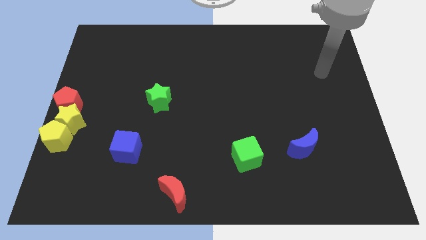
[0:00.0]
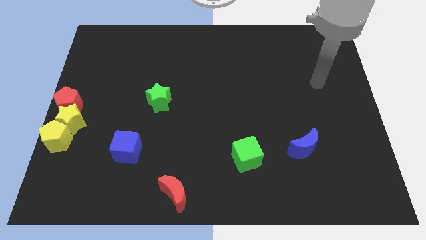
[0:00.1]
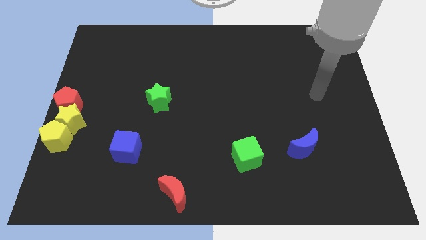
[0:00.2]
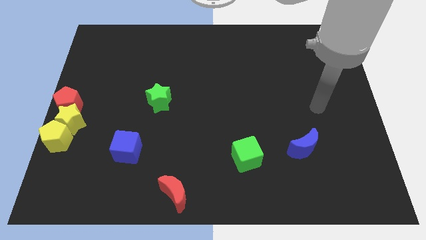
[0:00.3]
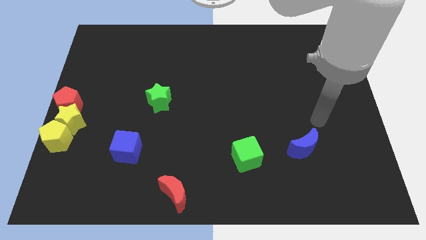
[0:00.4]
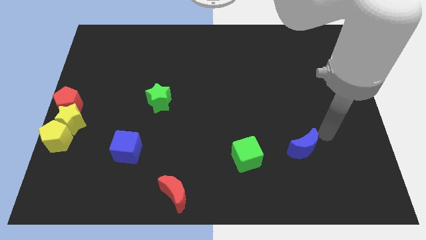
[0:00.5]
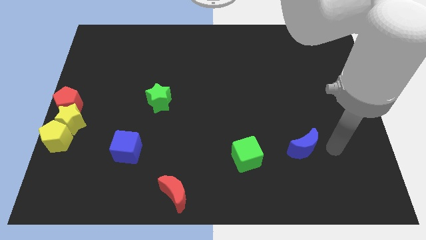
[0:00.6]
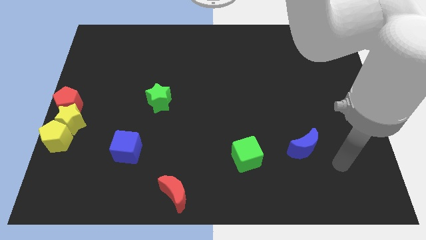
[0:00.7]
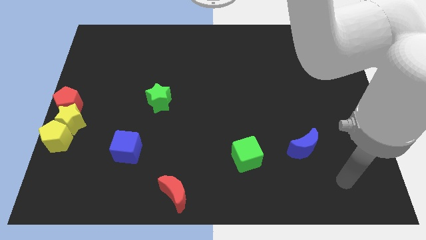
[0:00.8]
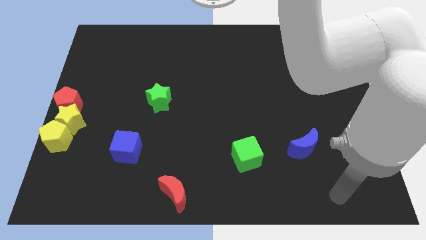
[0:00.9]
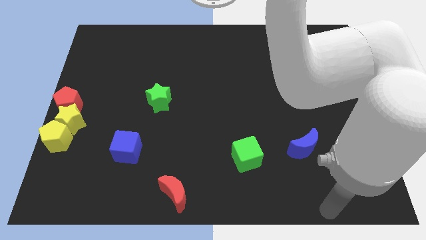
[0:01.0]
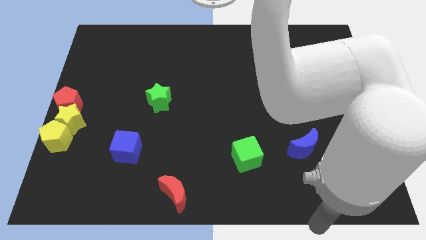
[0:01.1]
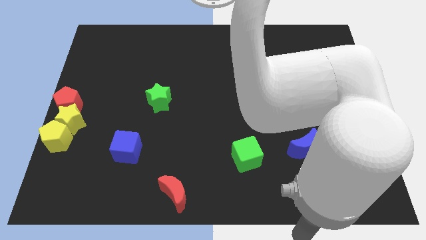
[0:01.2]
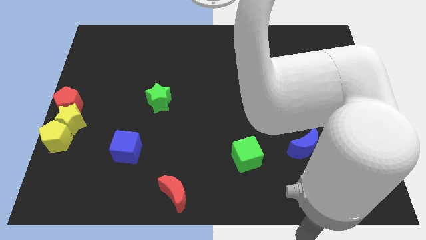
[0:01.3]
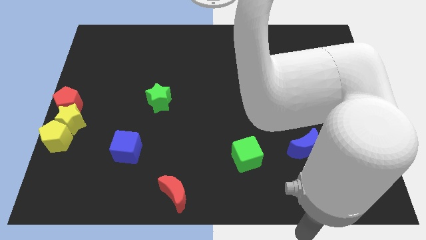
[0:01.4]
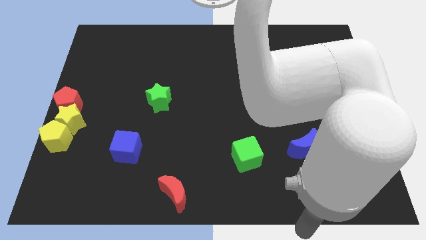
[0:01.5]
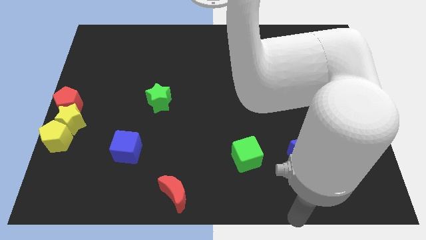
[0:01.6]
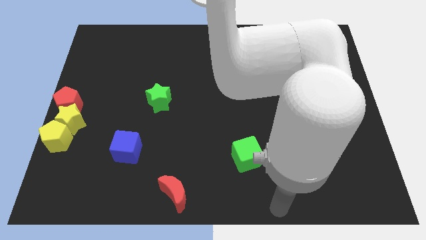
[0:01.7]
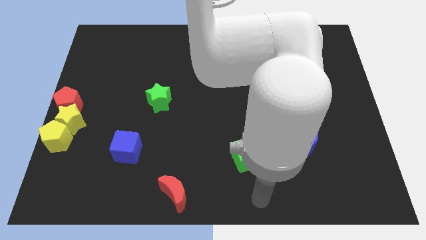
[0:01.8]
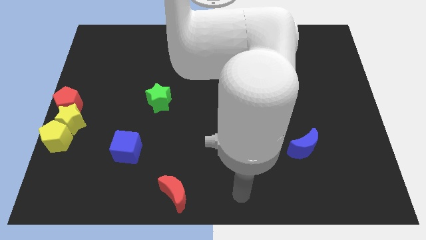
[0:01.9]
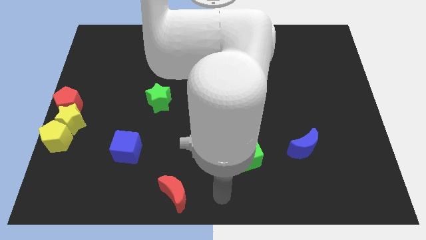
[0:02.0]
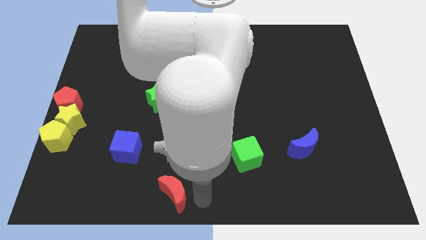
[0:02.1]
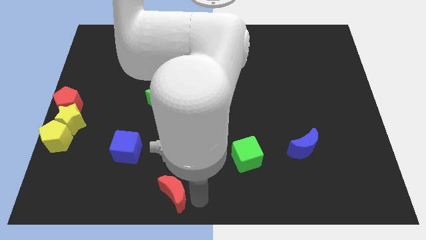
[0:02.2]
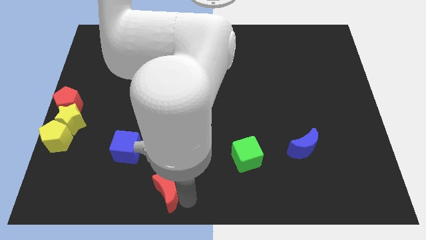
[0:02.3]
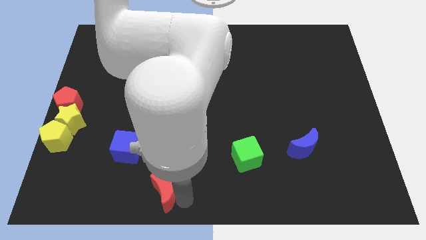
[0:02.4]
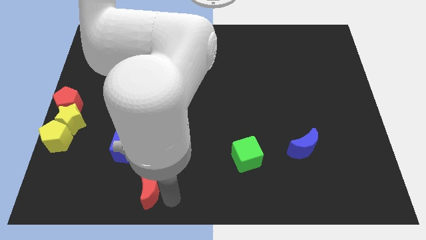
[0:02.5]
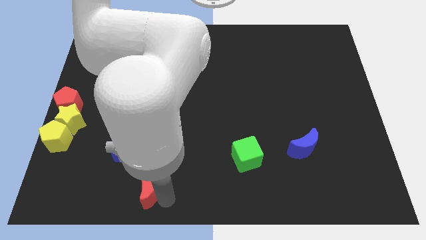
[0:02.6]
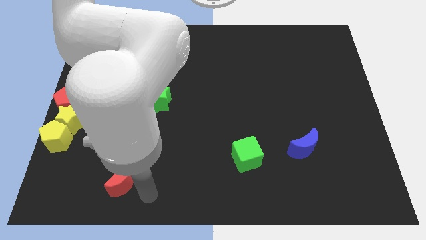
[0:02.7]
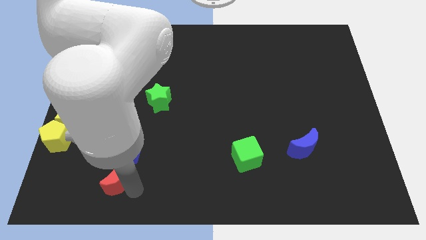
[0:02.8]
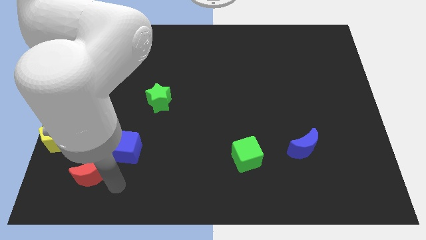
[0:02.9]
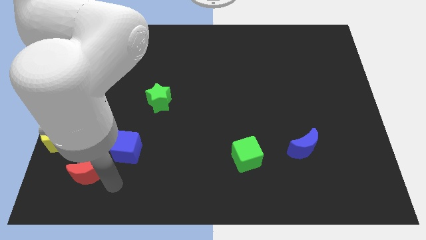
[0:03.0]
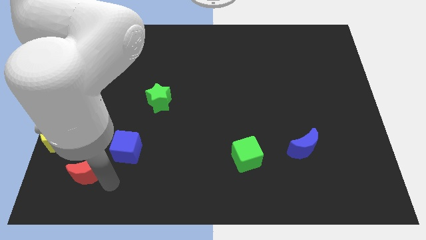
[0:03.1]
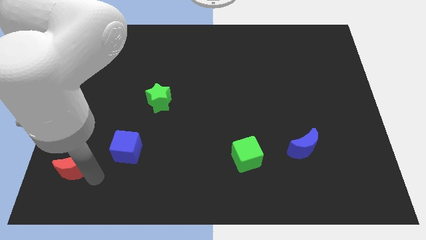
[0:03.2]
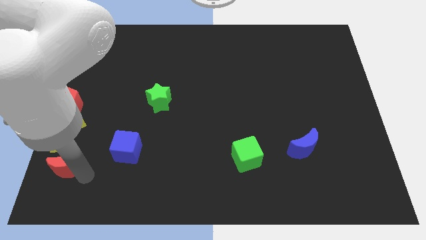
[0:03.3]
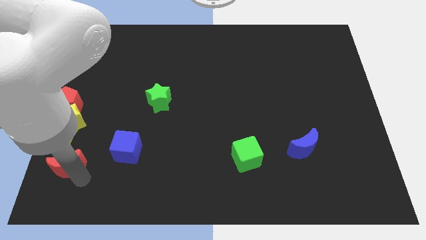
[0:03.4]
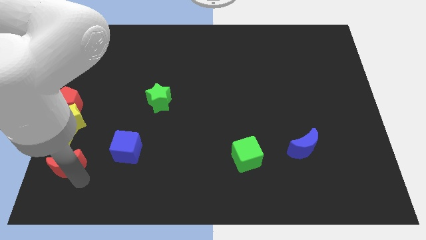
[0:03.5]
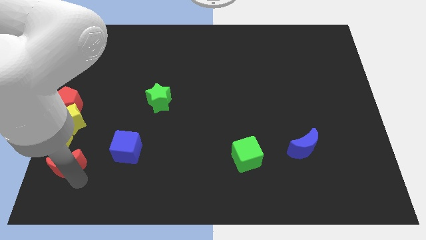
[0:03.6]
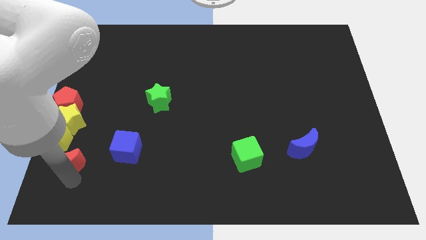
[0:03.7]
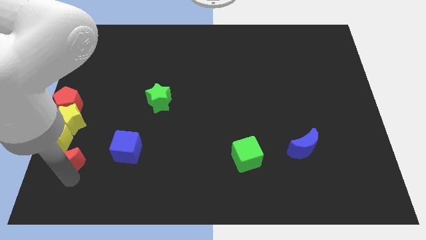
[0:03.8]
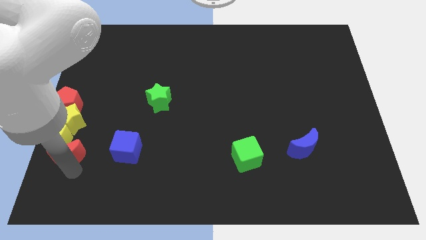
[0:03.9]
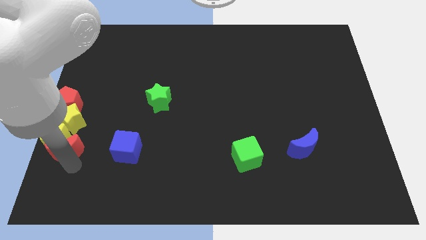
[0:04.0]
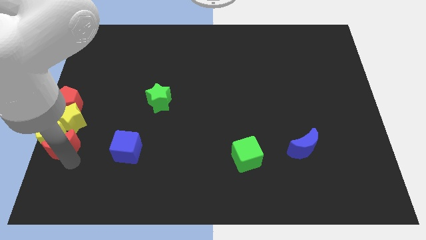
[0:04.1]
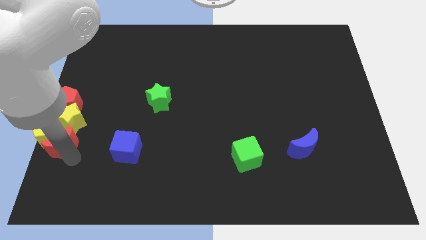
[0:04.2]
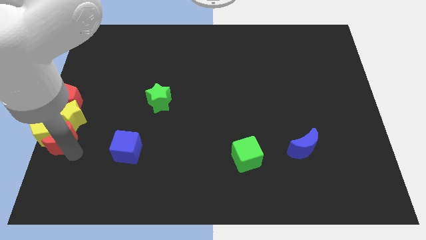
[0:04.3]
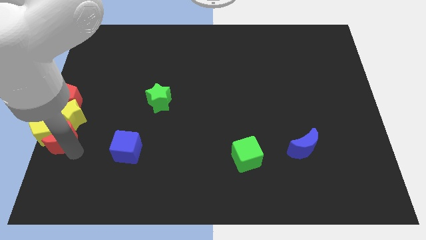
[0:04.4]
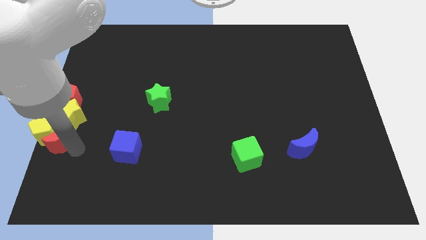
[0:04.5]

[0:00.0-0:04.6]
push the red moon into the yellow pentagon

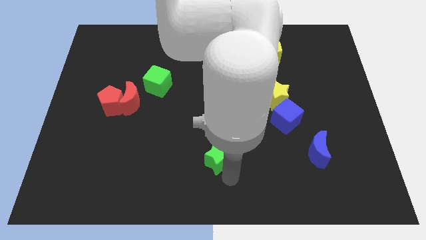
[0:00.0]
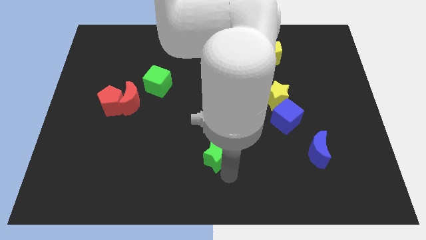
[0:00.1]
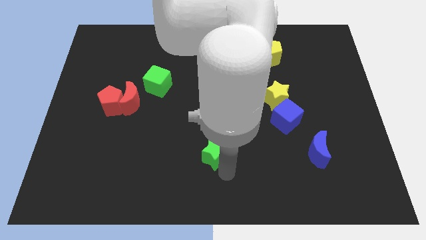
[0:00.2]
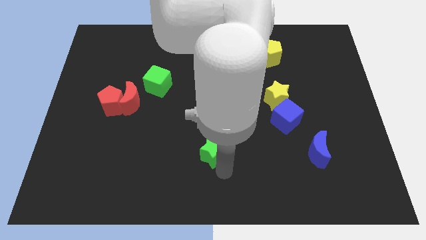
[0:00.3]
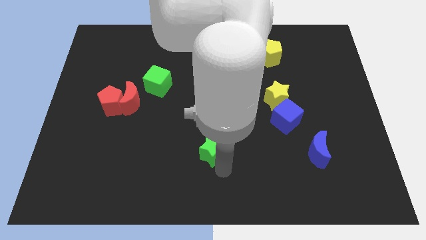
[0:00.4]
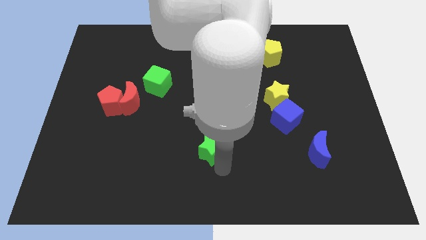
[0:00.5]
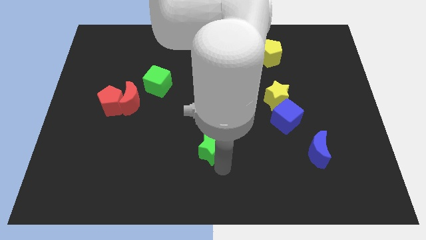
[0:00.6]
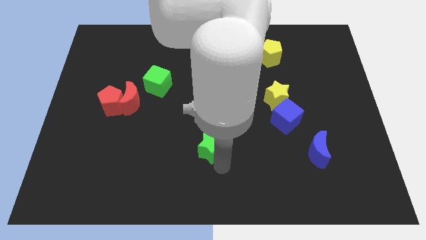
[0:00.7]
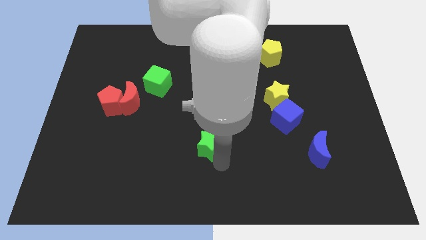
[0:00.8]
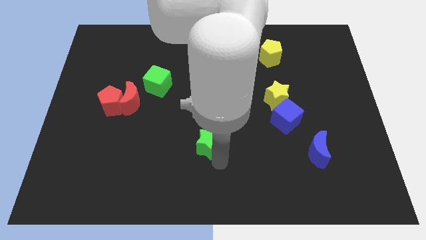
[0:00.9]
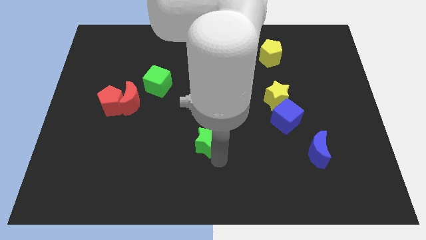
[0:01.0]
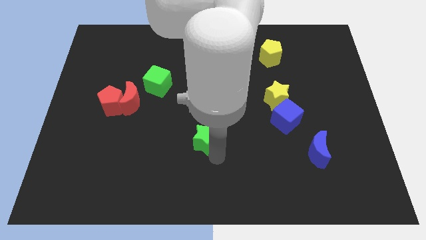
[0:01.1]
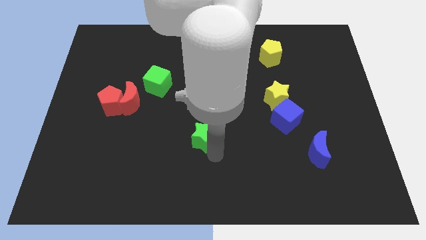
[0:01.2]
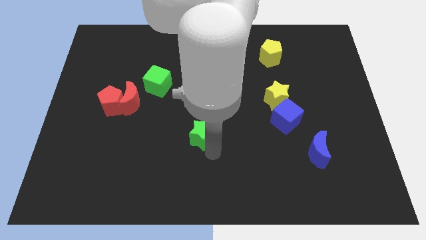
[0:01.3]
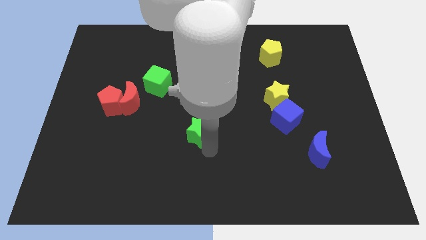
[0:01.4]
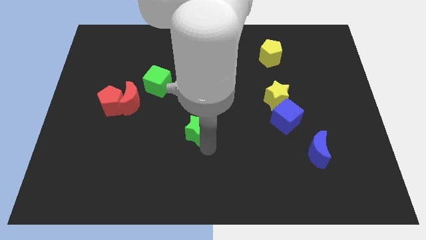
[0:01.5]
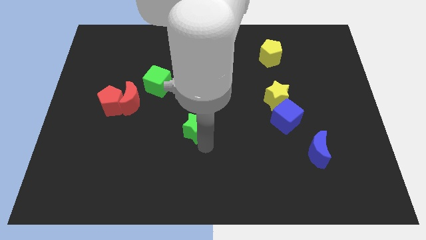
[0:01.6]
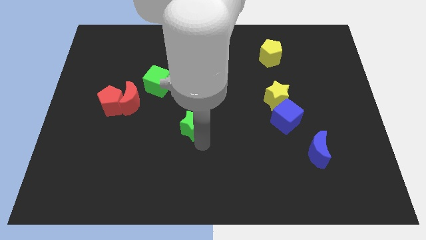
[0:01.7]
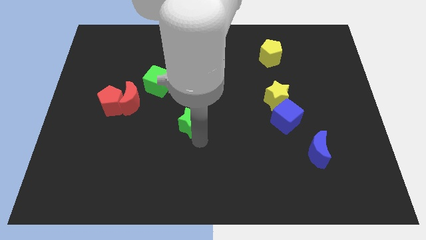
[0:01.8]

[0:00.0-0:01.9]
move the green star towards the right side of the green cube

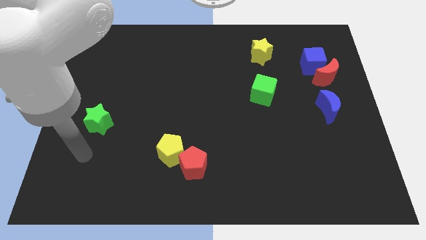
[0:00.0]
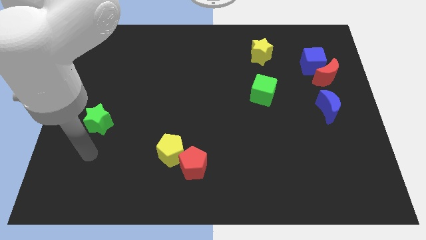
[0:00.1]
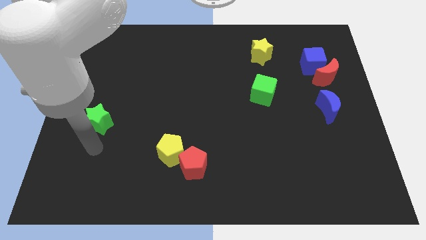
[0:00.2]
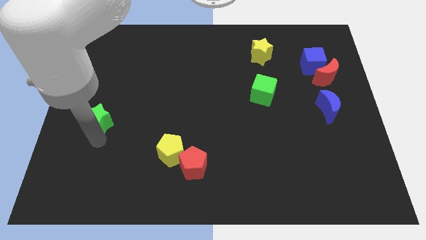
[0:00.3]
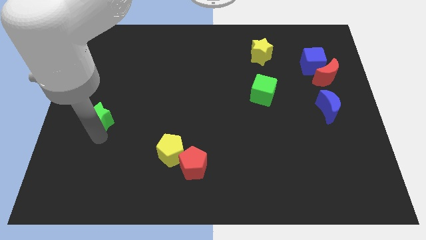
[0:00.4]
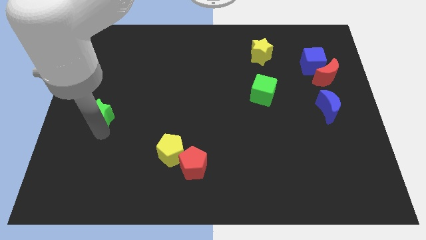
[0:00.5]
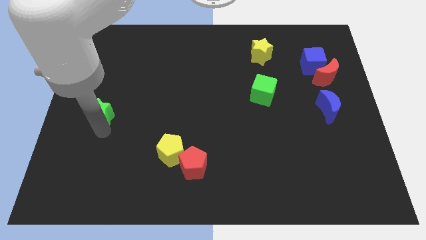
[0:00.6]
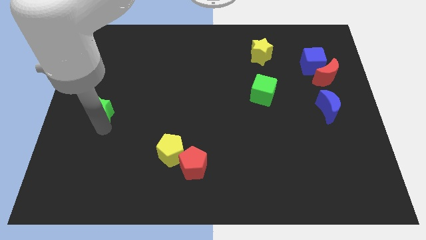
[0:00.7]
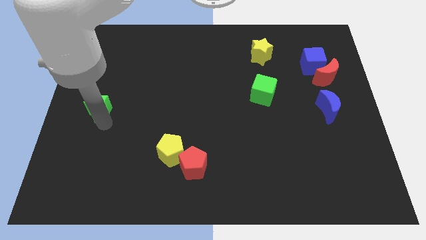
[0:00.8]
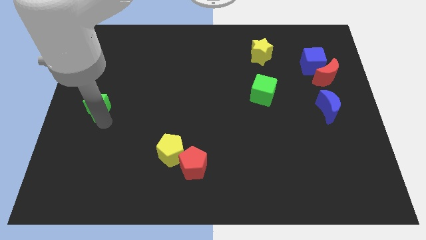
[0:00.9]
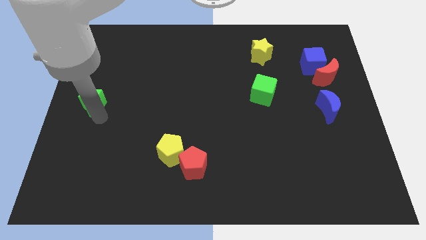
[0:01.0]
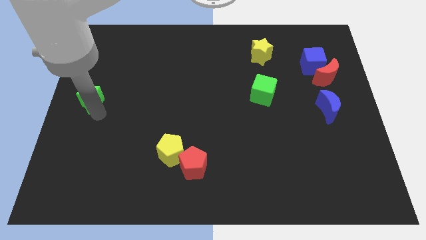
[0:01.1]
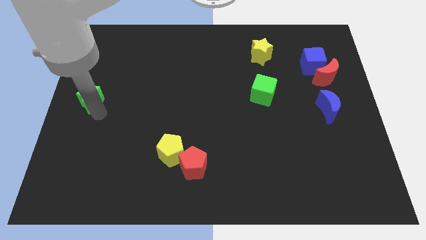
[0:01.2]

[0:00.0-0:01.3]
place green star in the center left

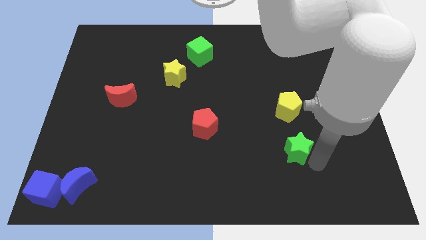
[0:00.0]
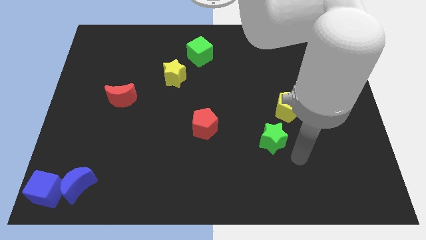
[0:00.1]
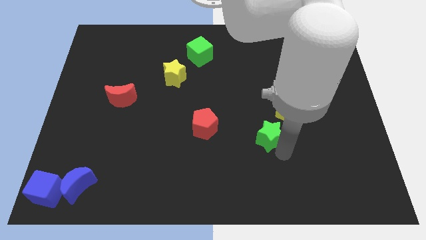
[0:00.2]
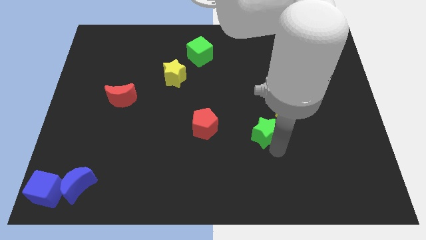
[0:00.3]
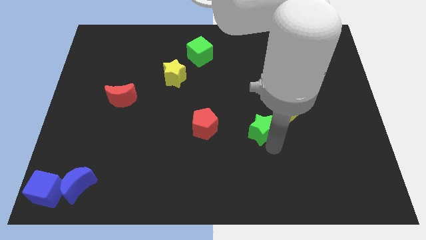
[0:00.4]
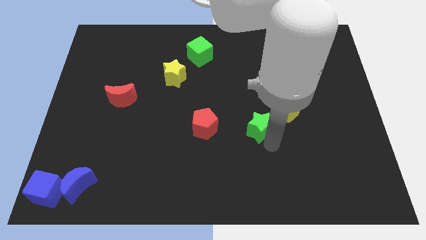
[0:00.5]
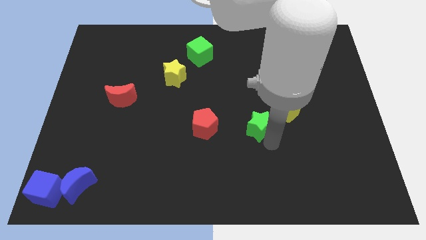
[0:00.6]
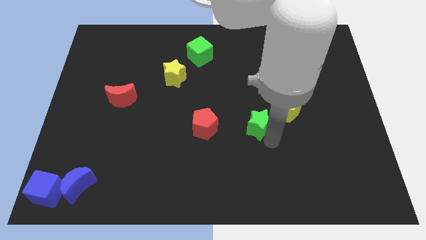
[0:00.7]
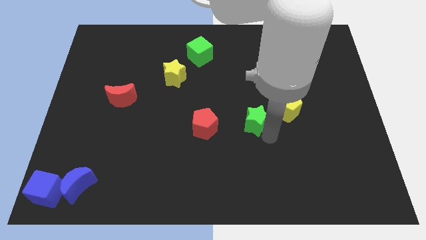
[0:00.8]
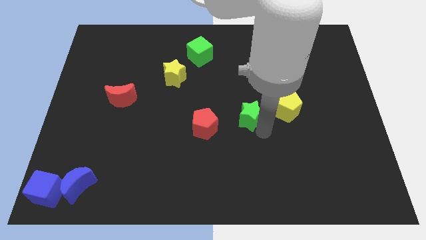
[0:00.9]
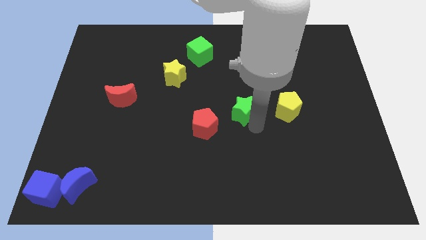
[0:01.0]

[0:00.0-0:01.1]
place green star in between the pentagons

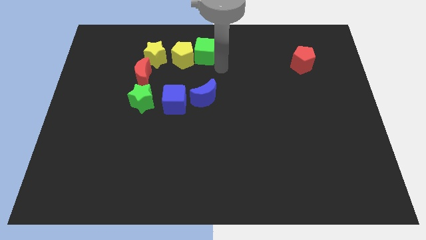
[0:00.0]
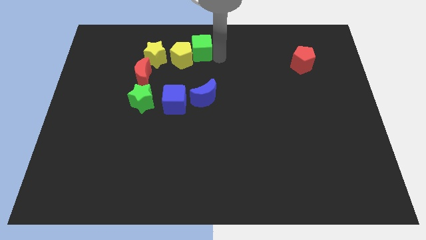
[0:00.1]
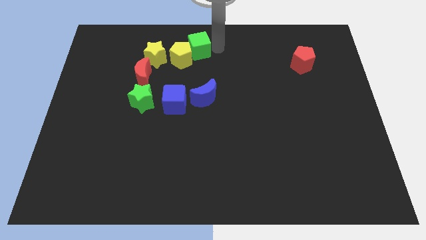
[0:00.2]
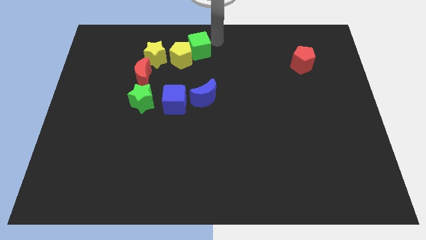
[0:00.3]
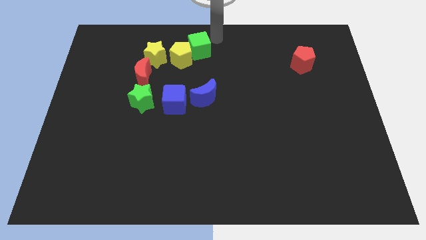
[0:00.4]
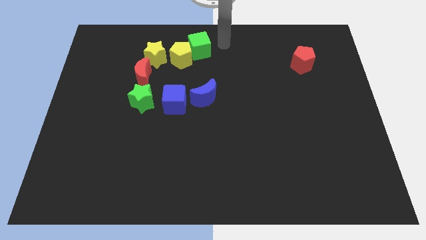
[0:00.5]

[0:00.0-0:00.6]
touch the green cube
